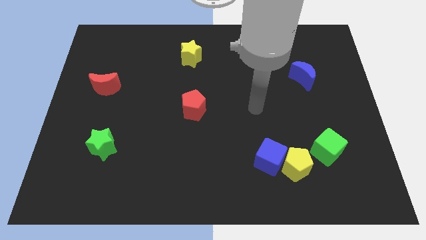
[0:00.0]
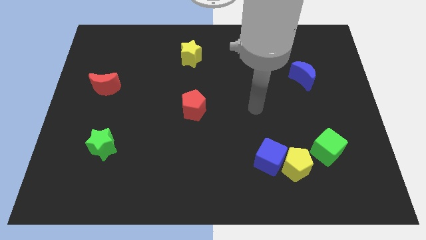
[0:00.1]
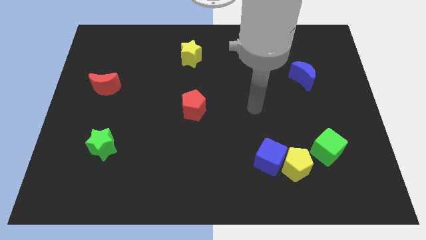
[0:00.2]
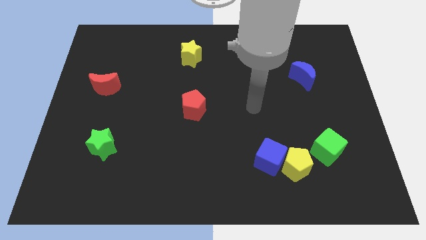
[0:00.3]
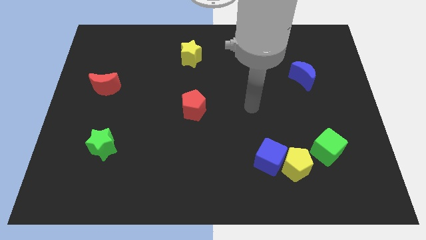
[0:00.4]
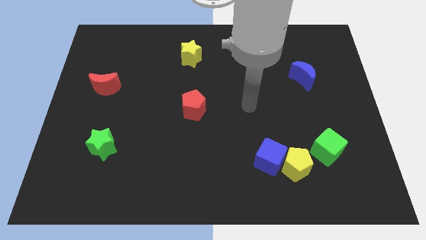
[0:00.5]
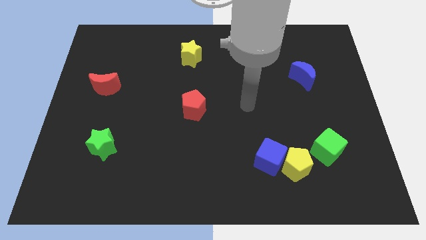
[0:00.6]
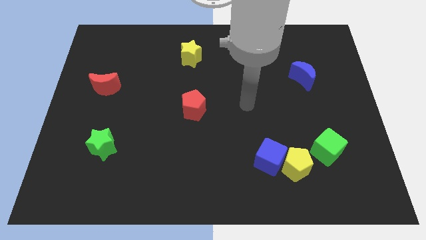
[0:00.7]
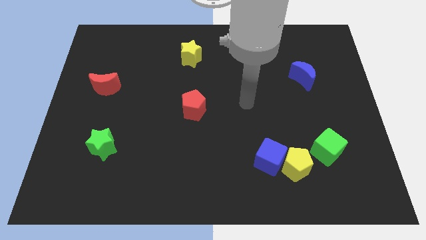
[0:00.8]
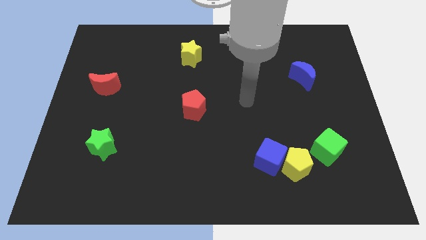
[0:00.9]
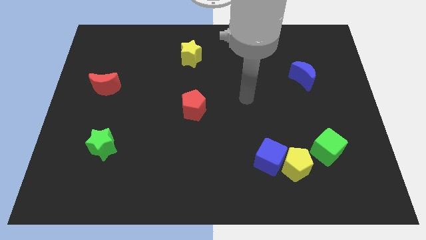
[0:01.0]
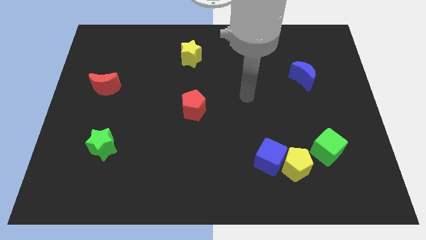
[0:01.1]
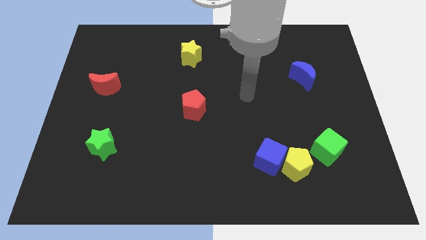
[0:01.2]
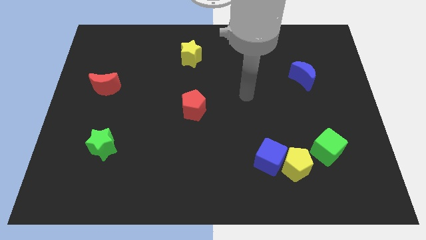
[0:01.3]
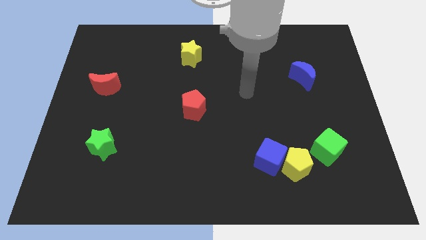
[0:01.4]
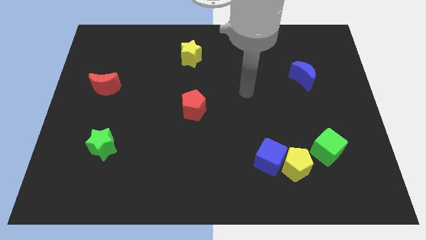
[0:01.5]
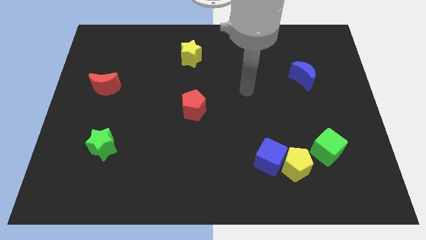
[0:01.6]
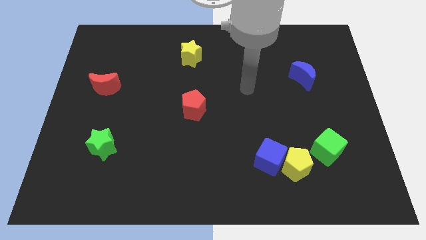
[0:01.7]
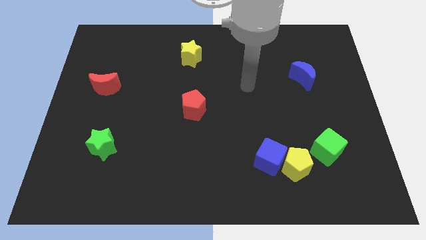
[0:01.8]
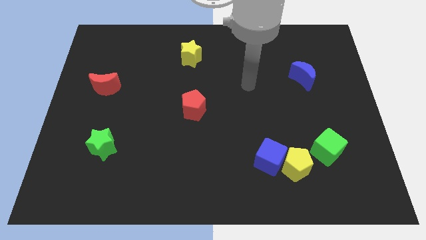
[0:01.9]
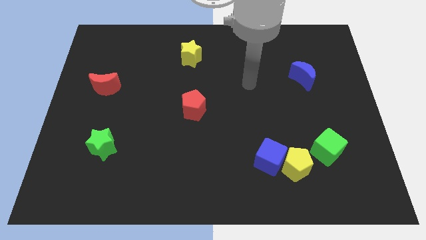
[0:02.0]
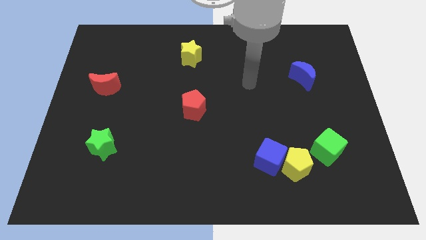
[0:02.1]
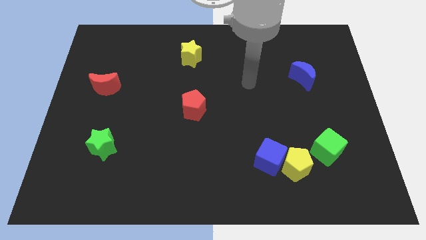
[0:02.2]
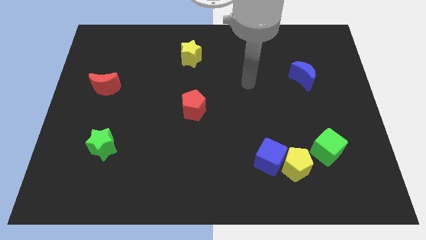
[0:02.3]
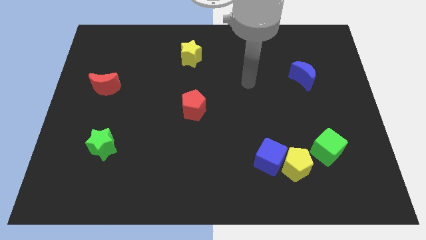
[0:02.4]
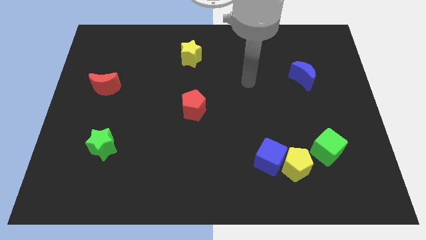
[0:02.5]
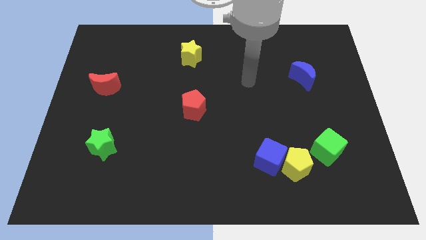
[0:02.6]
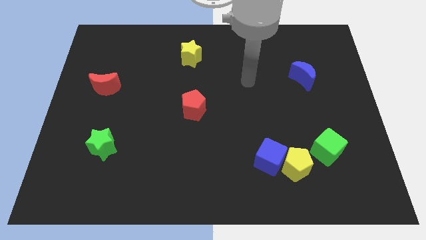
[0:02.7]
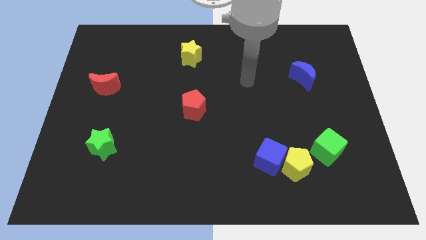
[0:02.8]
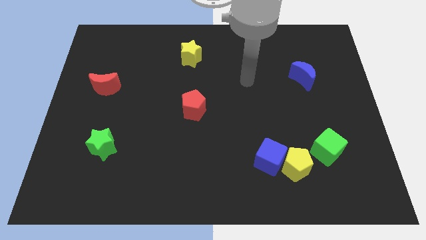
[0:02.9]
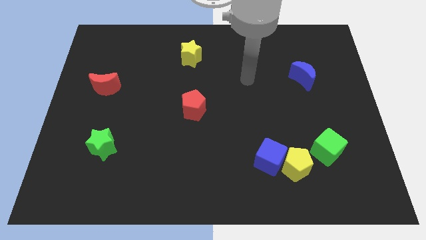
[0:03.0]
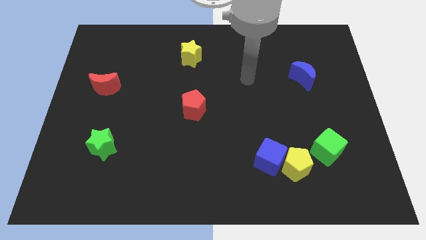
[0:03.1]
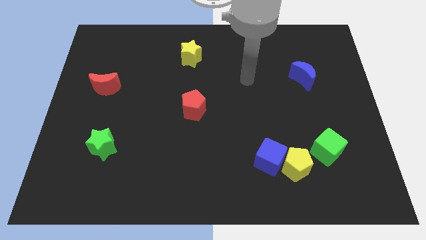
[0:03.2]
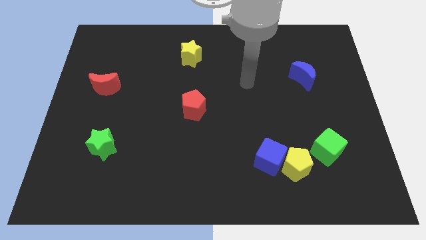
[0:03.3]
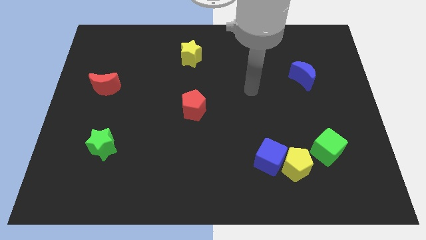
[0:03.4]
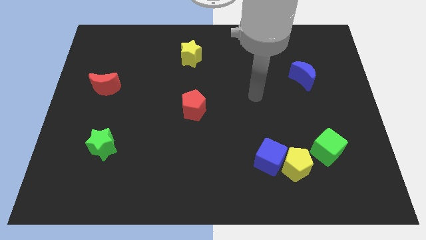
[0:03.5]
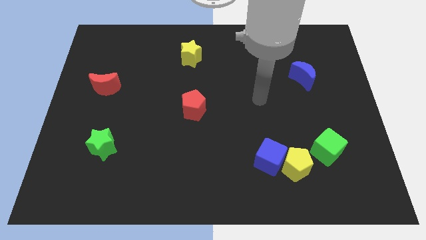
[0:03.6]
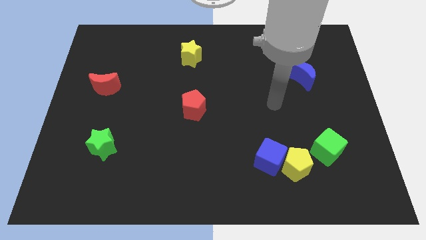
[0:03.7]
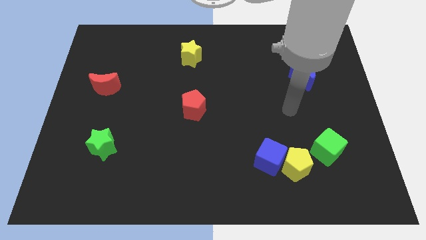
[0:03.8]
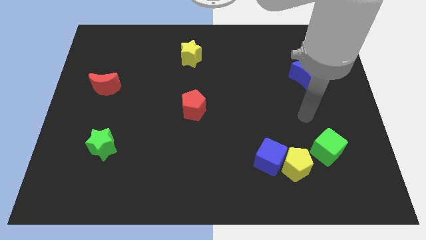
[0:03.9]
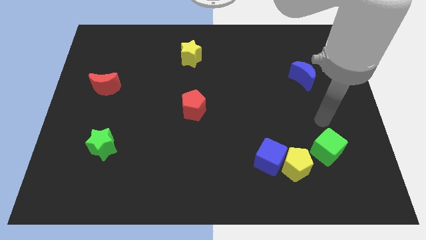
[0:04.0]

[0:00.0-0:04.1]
place the arm below the blue moon

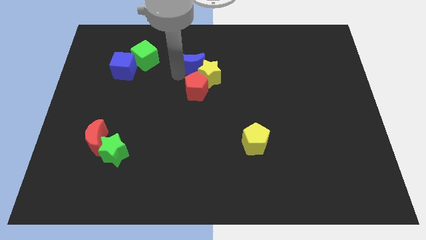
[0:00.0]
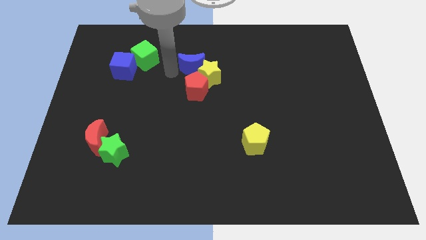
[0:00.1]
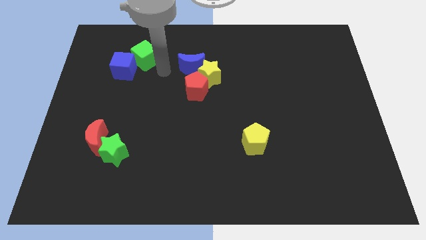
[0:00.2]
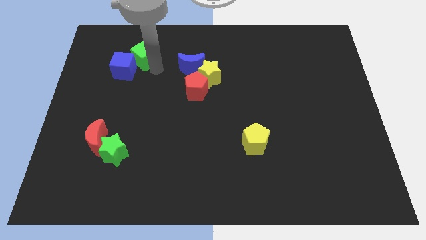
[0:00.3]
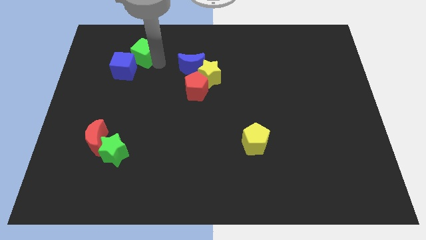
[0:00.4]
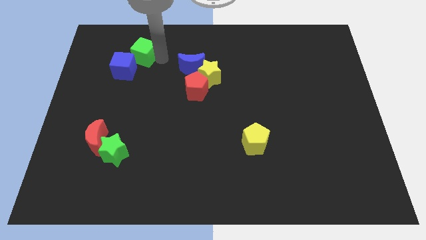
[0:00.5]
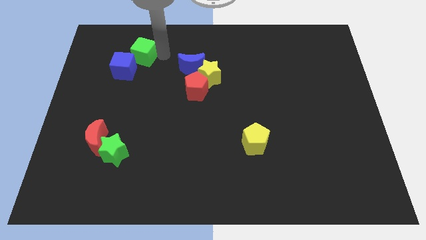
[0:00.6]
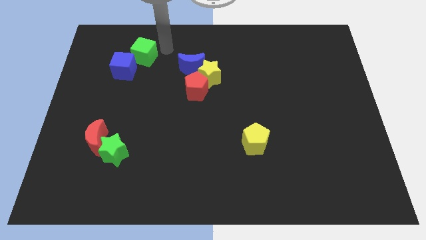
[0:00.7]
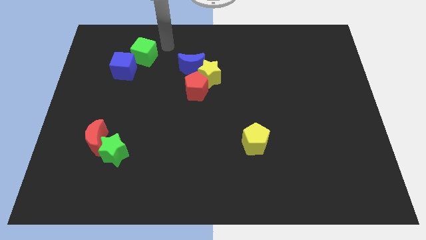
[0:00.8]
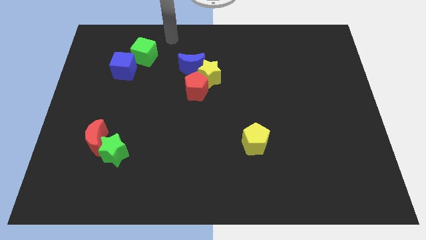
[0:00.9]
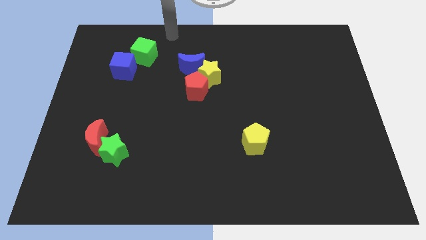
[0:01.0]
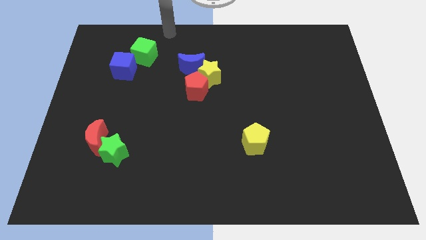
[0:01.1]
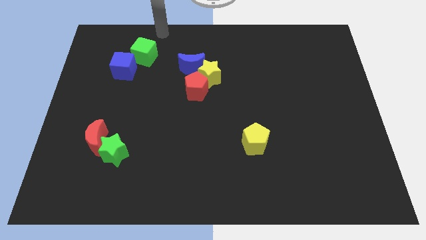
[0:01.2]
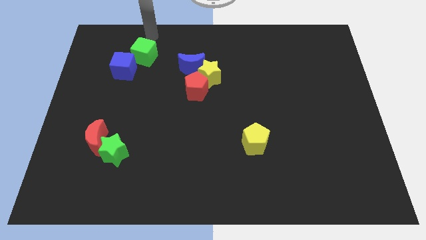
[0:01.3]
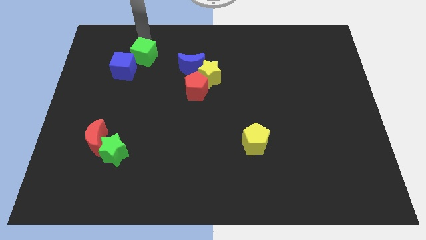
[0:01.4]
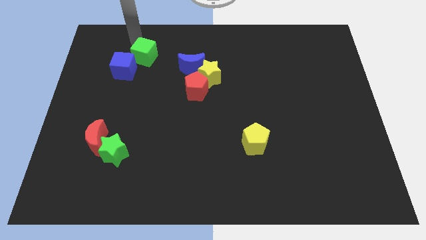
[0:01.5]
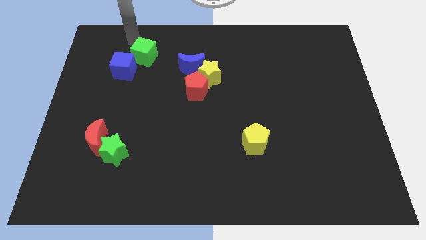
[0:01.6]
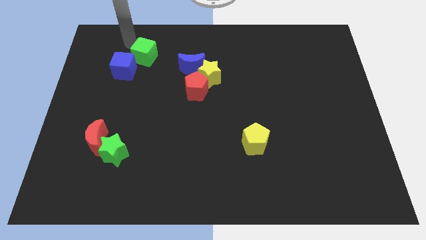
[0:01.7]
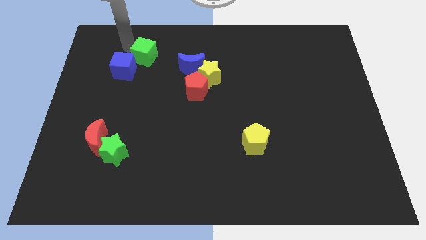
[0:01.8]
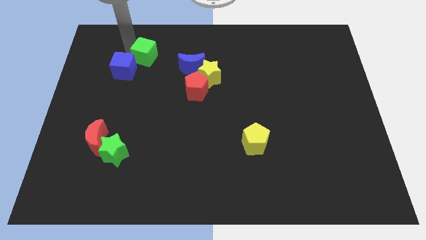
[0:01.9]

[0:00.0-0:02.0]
move the arm towards the left of green cube

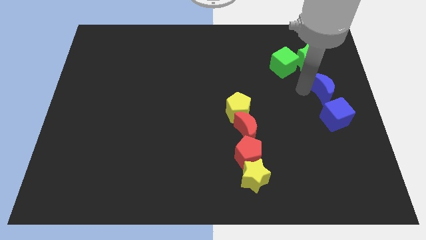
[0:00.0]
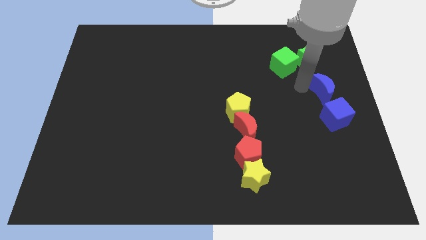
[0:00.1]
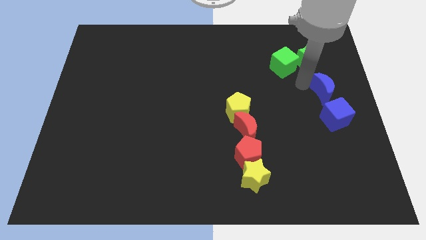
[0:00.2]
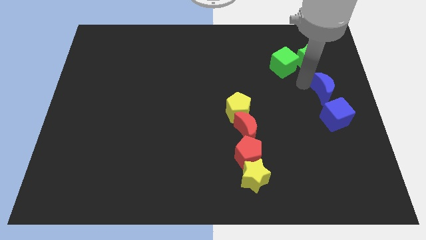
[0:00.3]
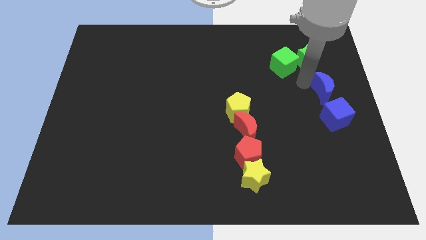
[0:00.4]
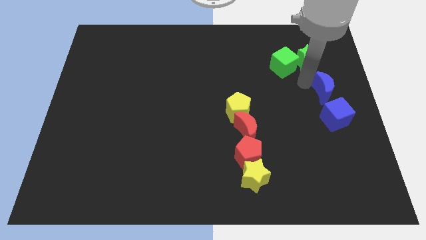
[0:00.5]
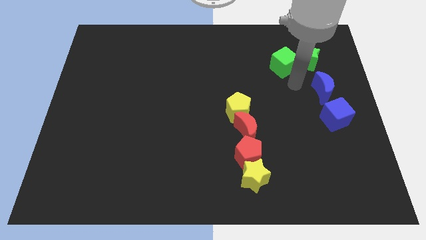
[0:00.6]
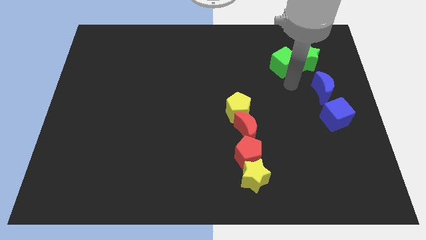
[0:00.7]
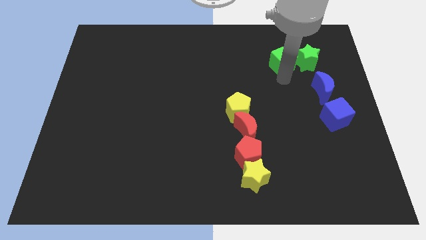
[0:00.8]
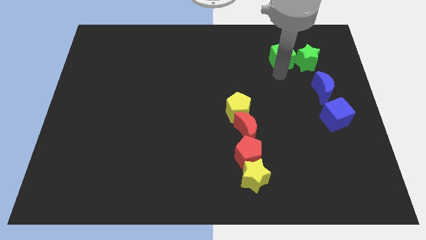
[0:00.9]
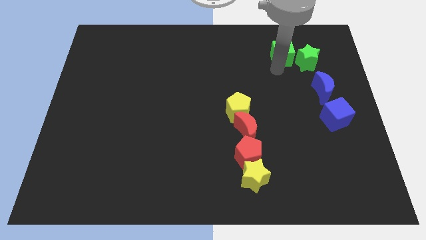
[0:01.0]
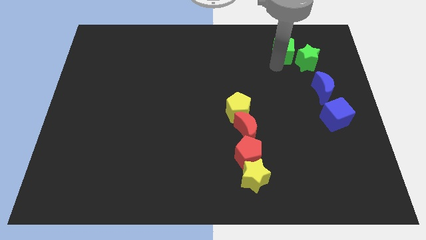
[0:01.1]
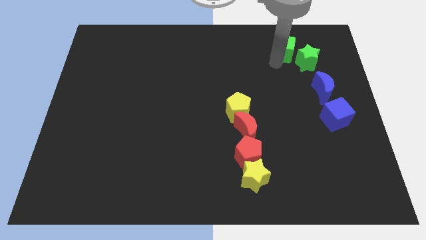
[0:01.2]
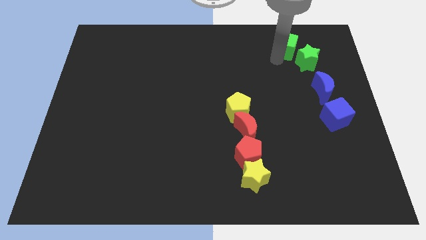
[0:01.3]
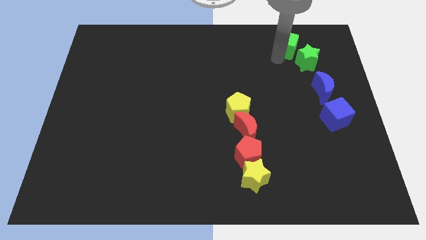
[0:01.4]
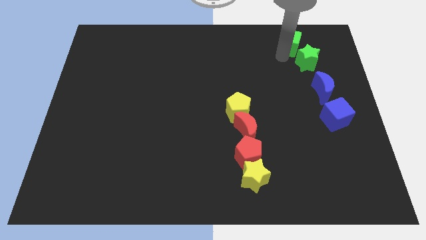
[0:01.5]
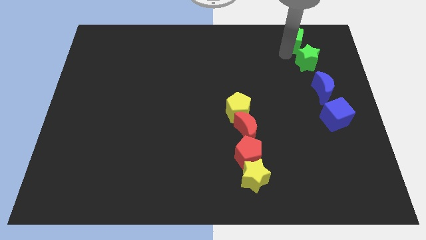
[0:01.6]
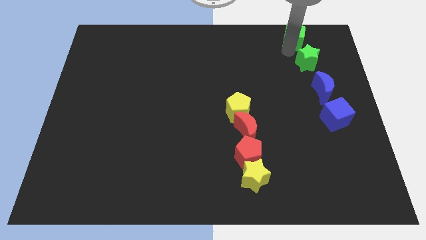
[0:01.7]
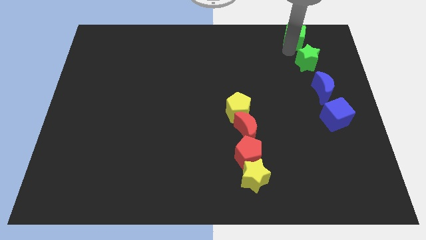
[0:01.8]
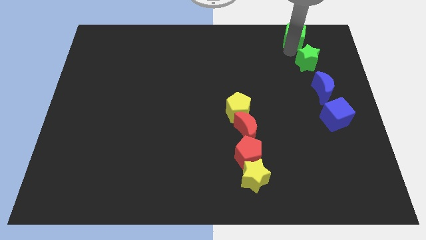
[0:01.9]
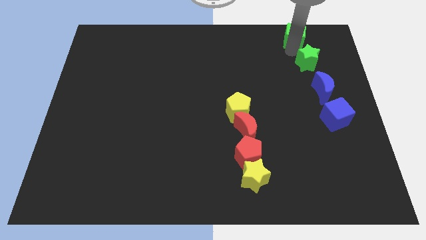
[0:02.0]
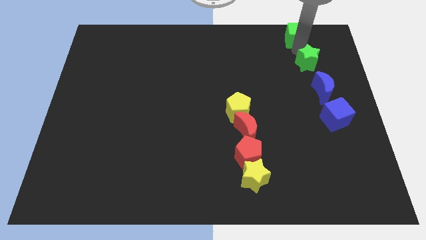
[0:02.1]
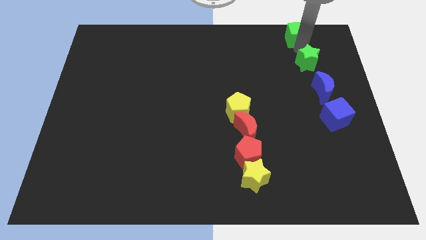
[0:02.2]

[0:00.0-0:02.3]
move the green cube to the top side of the green star

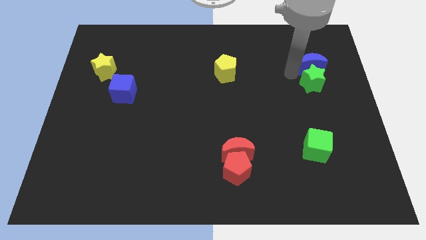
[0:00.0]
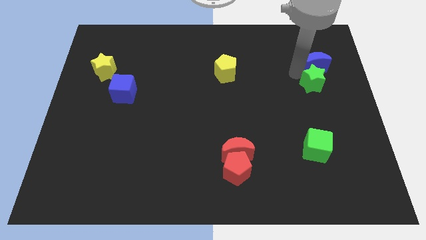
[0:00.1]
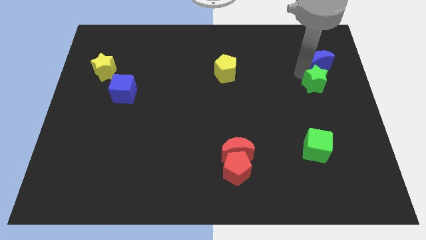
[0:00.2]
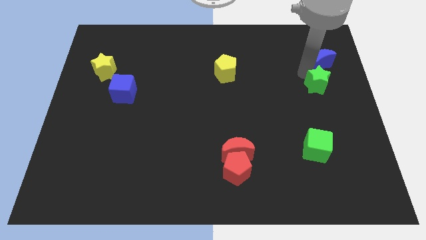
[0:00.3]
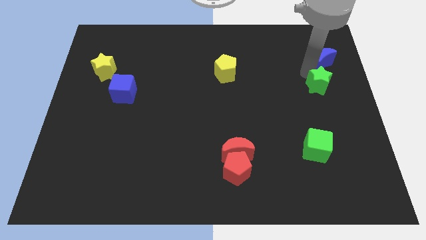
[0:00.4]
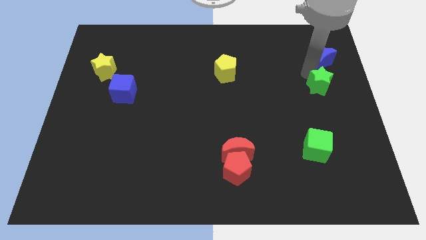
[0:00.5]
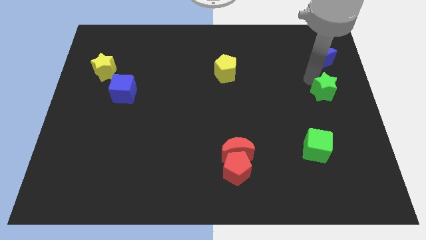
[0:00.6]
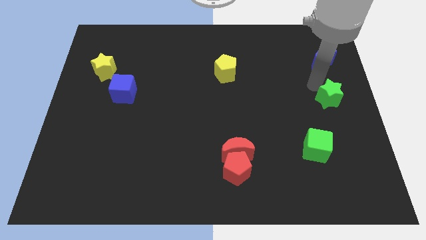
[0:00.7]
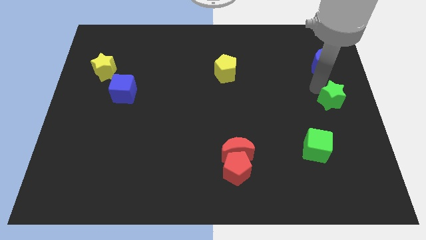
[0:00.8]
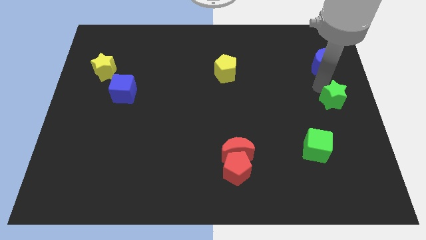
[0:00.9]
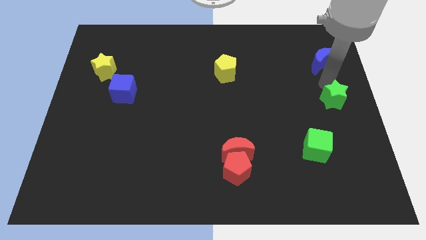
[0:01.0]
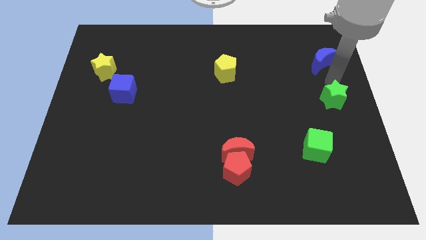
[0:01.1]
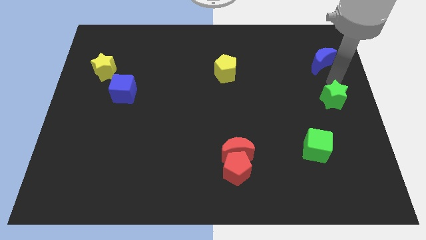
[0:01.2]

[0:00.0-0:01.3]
separate green star from blue crescent
